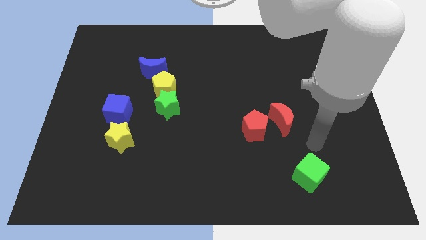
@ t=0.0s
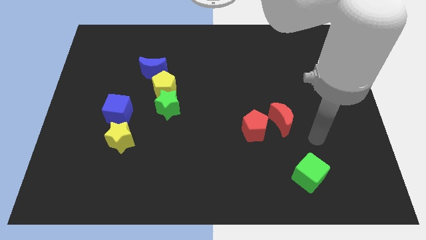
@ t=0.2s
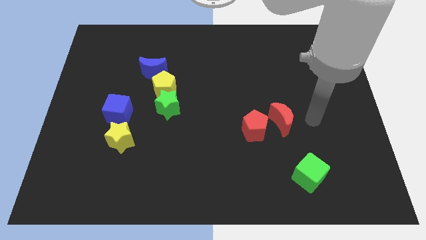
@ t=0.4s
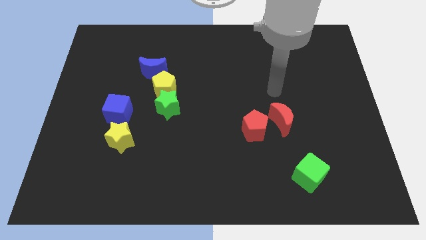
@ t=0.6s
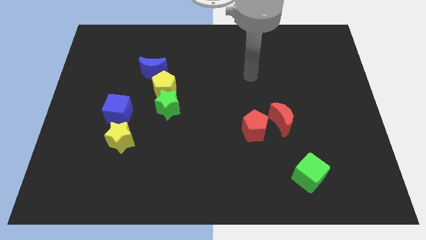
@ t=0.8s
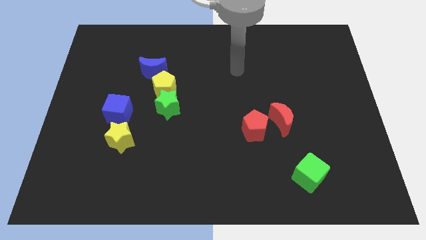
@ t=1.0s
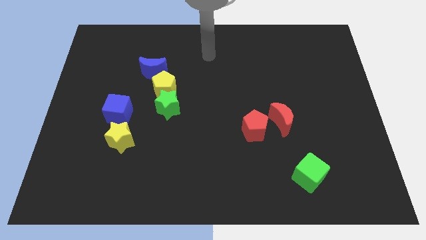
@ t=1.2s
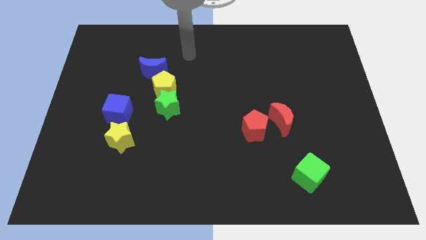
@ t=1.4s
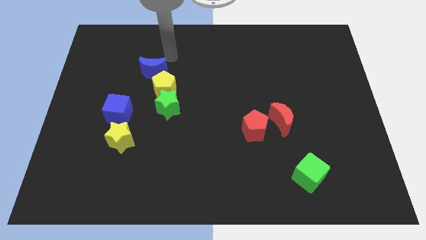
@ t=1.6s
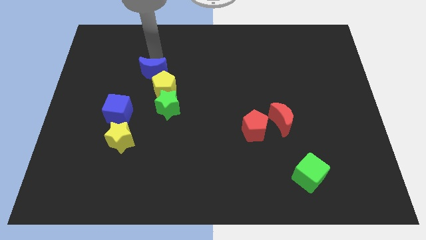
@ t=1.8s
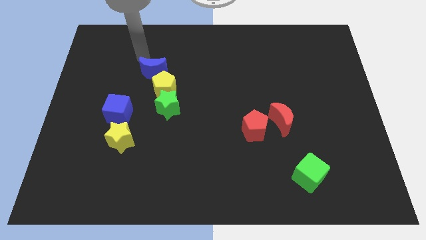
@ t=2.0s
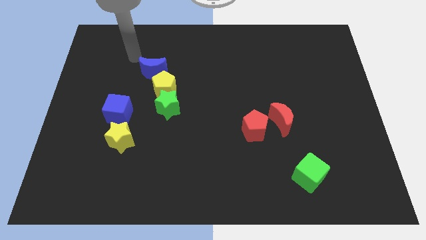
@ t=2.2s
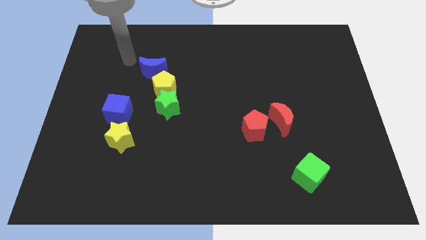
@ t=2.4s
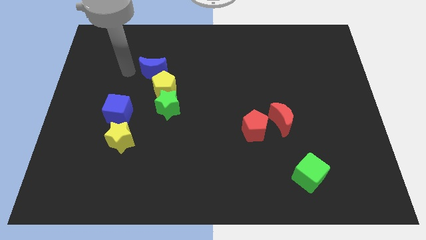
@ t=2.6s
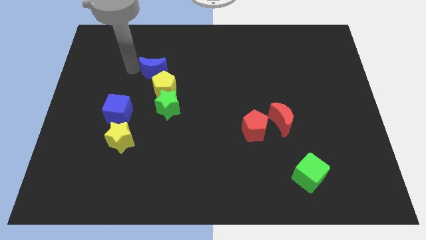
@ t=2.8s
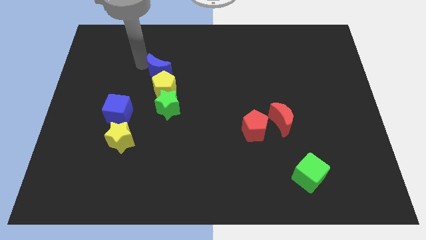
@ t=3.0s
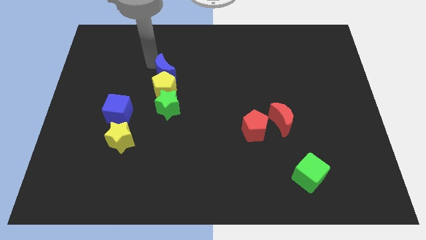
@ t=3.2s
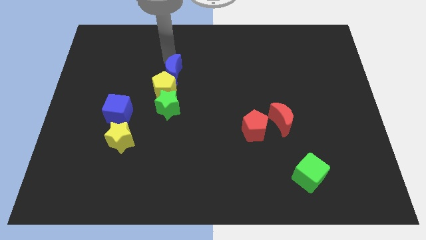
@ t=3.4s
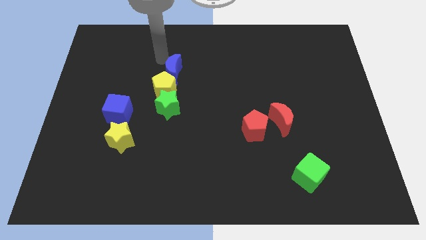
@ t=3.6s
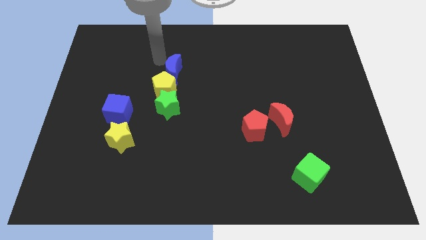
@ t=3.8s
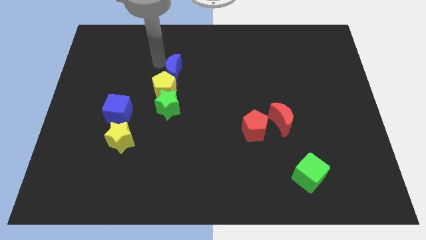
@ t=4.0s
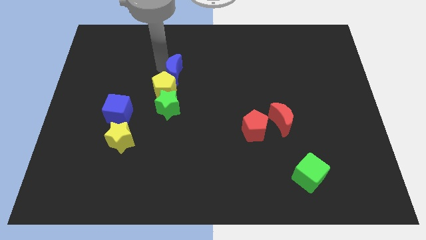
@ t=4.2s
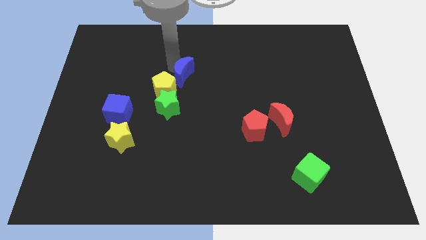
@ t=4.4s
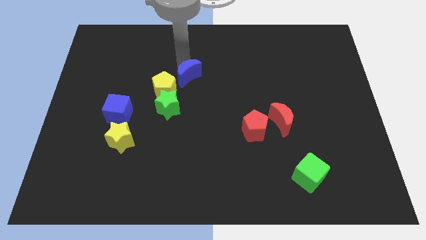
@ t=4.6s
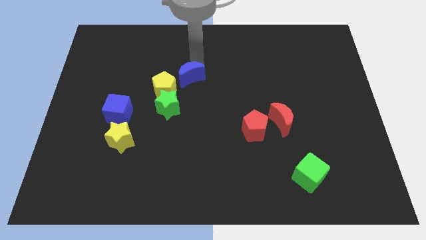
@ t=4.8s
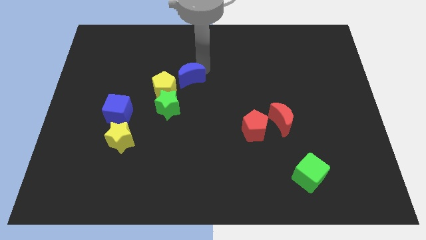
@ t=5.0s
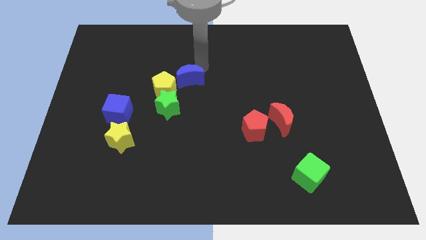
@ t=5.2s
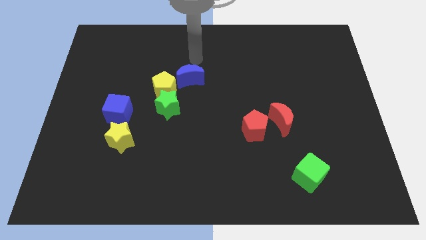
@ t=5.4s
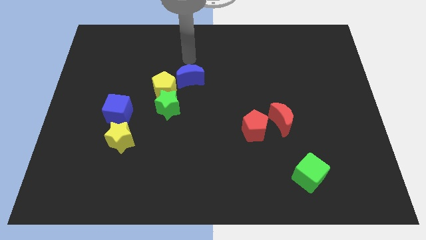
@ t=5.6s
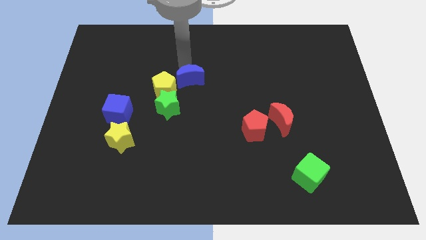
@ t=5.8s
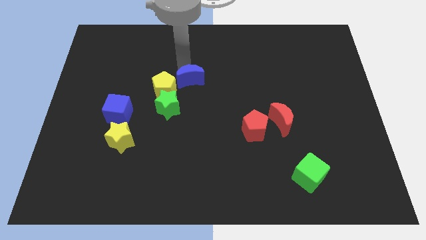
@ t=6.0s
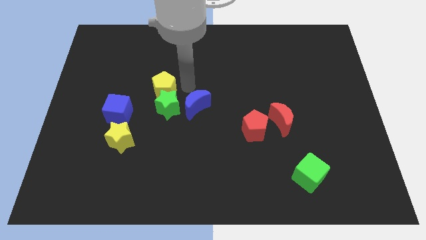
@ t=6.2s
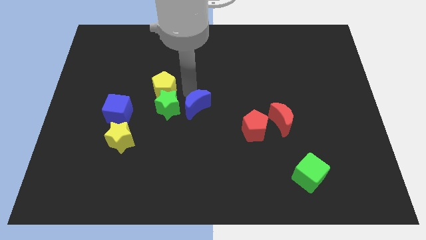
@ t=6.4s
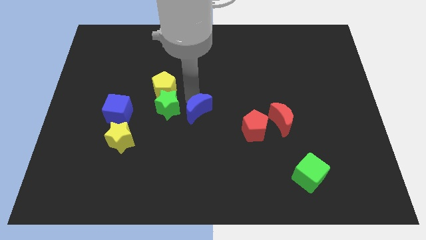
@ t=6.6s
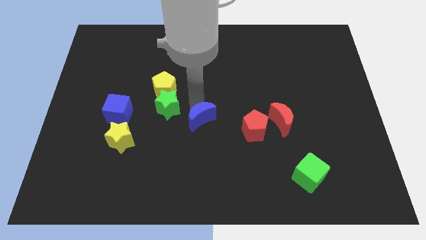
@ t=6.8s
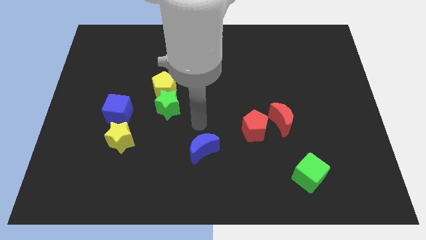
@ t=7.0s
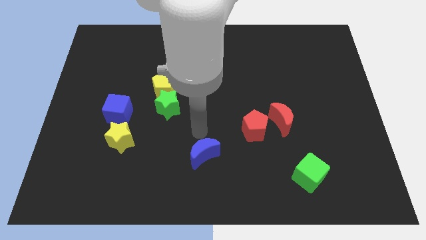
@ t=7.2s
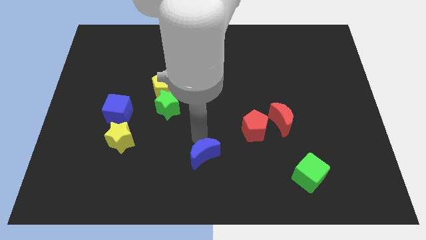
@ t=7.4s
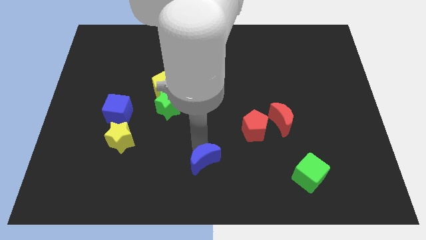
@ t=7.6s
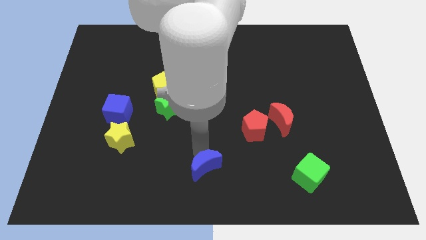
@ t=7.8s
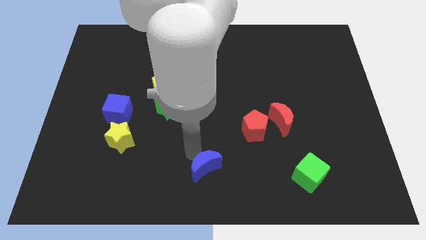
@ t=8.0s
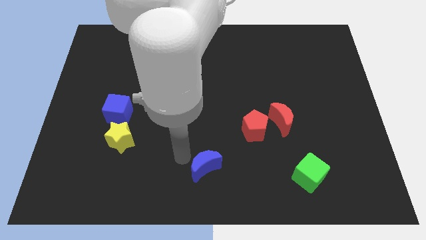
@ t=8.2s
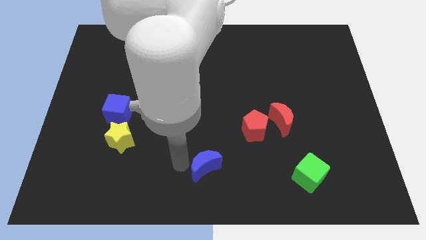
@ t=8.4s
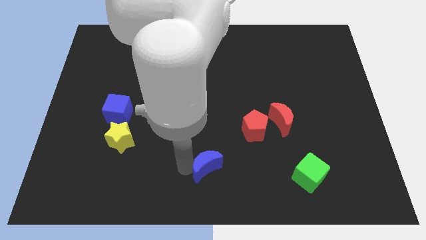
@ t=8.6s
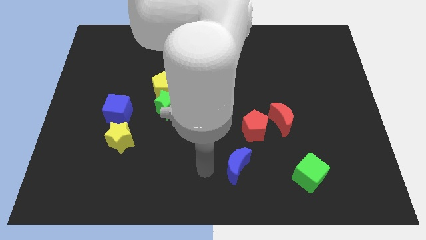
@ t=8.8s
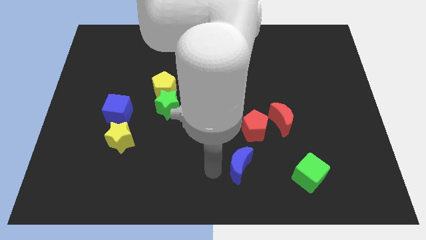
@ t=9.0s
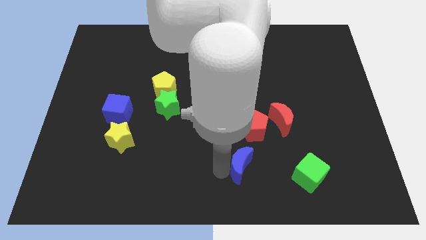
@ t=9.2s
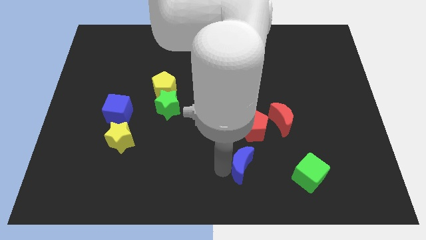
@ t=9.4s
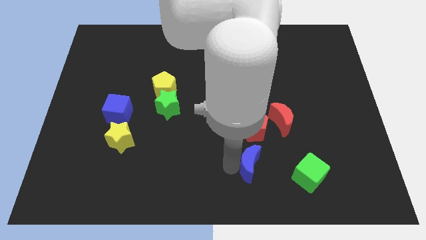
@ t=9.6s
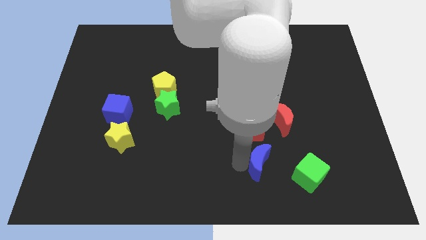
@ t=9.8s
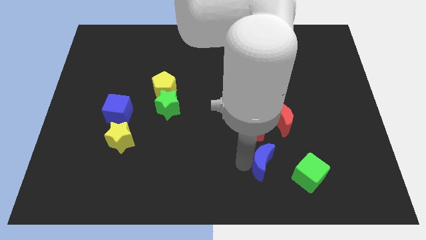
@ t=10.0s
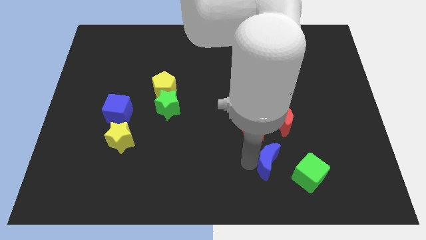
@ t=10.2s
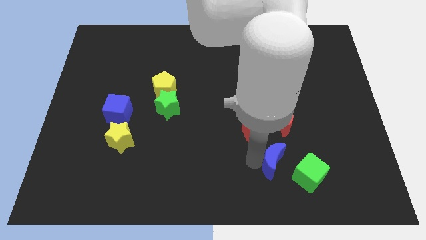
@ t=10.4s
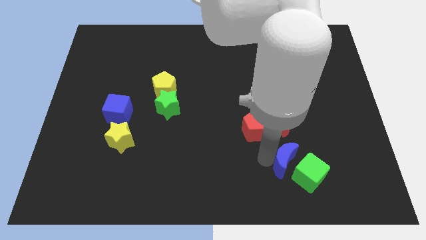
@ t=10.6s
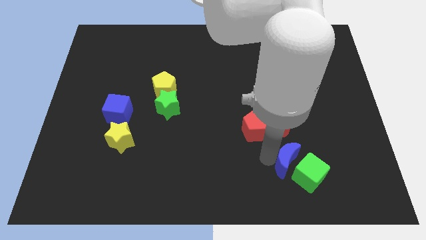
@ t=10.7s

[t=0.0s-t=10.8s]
push the blue moon to the green cube

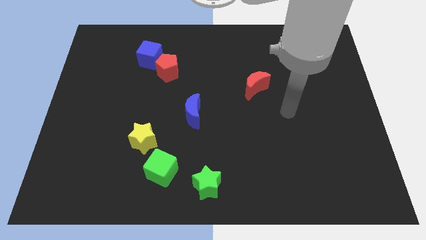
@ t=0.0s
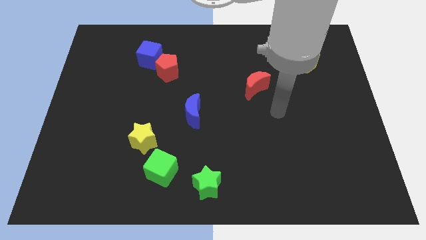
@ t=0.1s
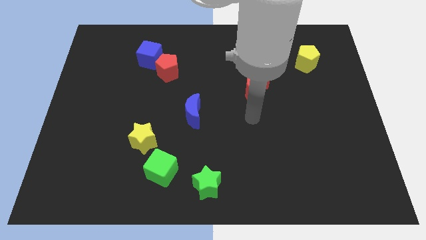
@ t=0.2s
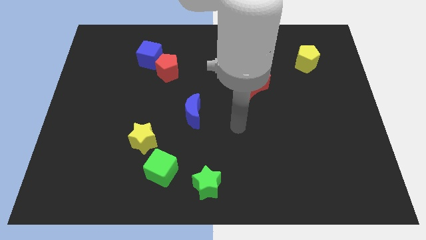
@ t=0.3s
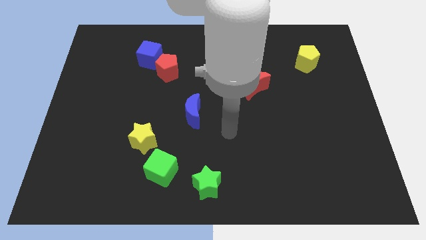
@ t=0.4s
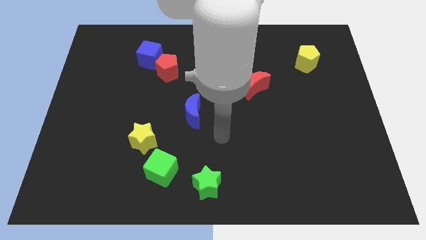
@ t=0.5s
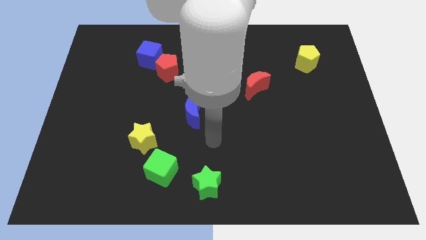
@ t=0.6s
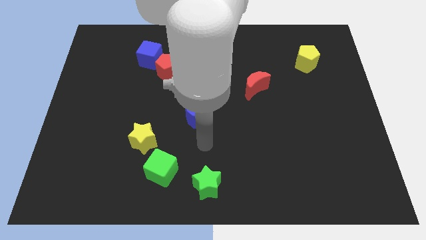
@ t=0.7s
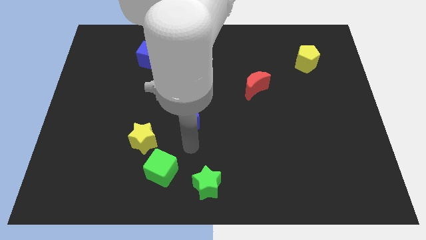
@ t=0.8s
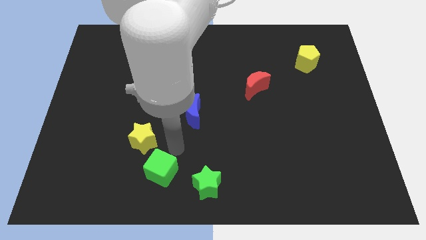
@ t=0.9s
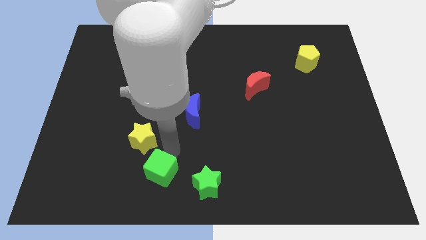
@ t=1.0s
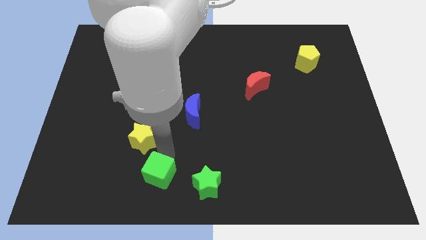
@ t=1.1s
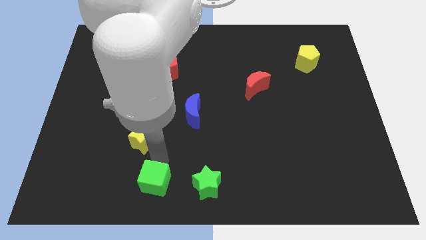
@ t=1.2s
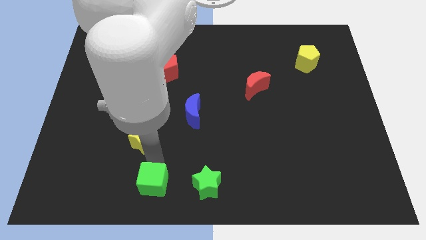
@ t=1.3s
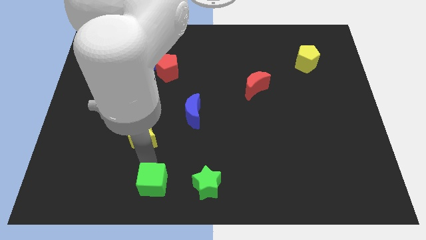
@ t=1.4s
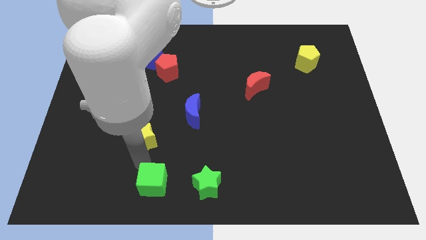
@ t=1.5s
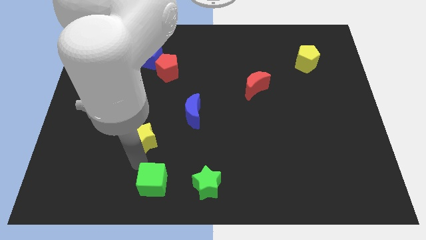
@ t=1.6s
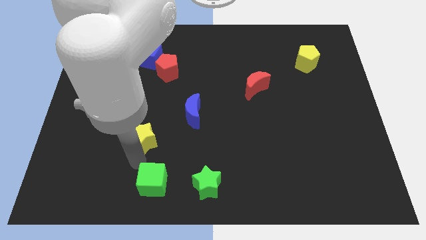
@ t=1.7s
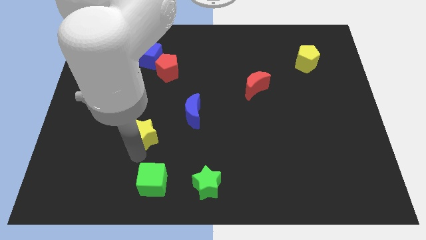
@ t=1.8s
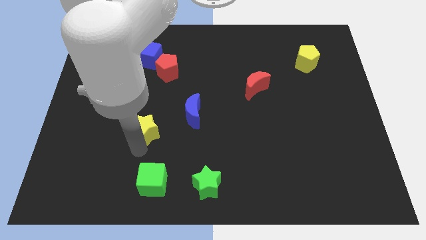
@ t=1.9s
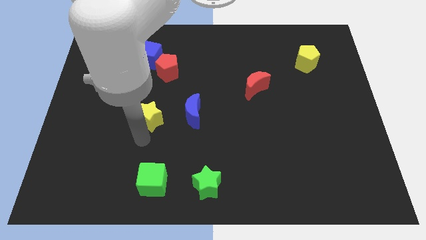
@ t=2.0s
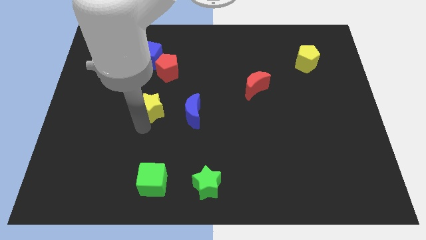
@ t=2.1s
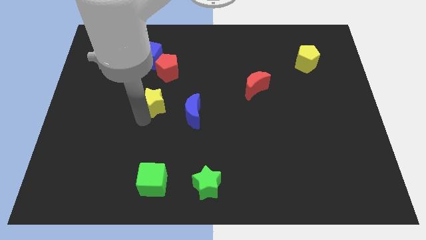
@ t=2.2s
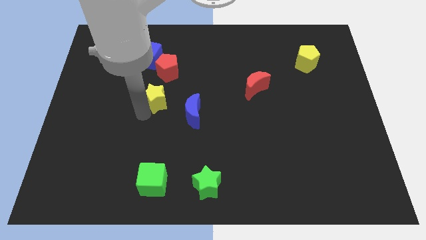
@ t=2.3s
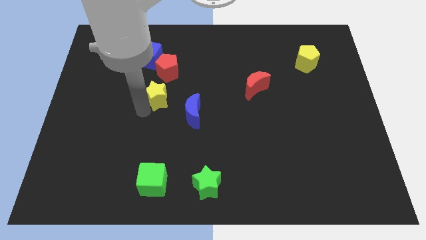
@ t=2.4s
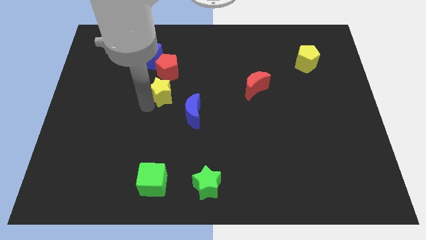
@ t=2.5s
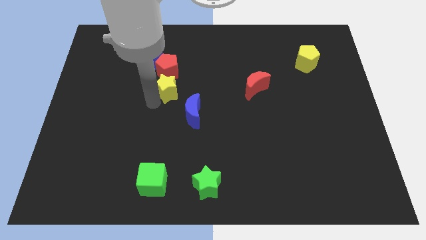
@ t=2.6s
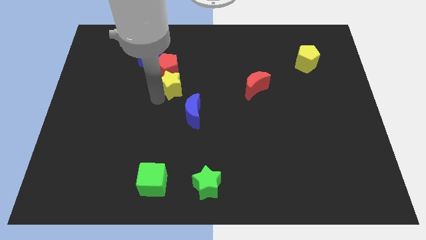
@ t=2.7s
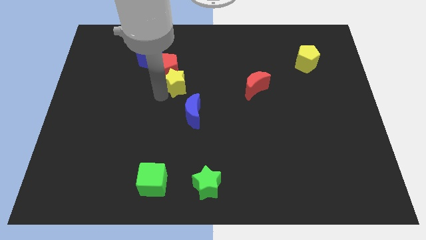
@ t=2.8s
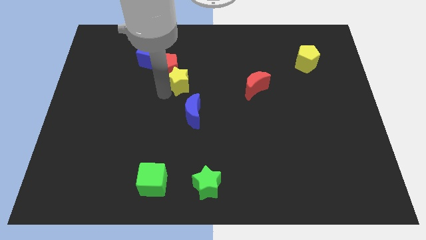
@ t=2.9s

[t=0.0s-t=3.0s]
put the yellow star towards the red pentagon
